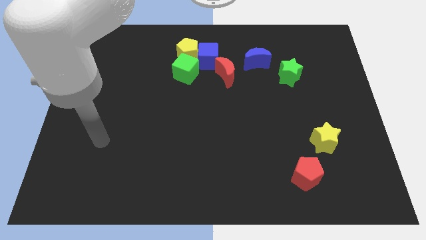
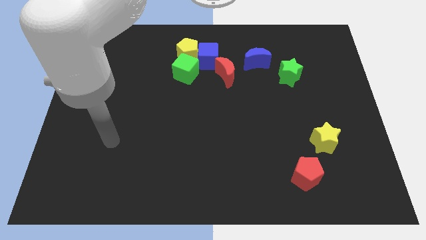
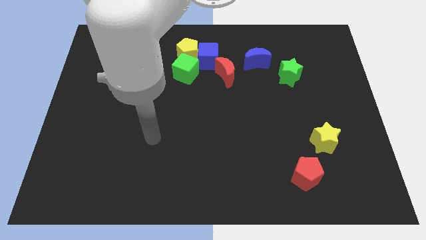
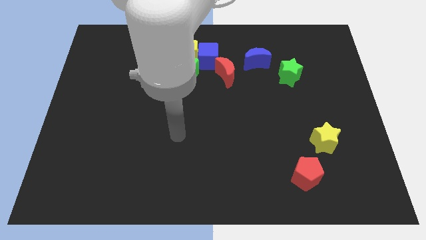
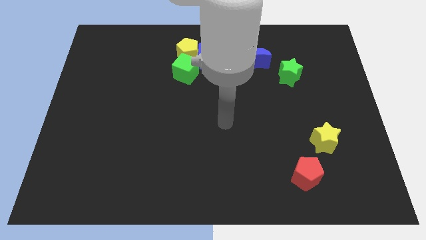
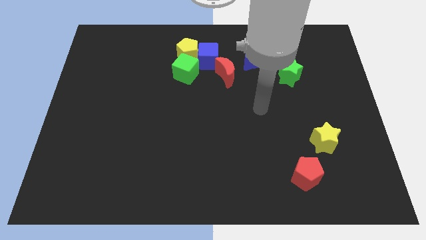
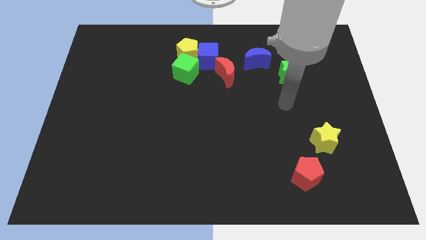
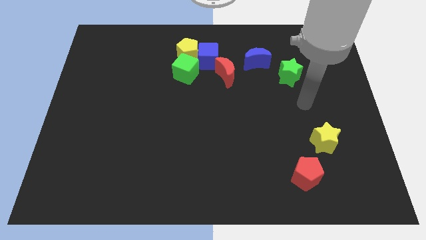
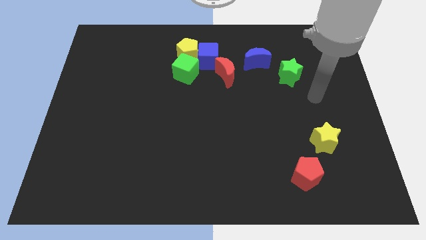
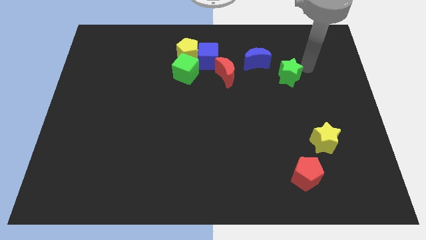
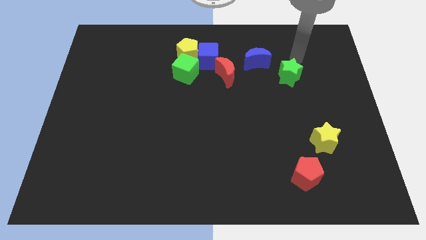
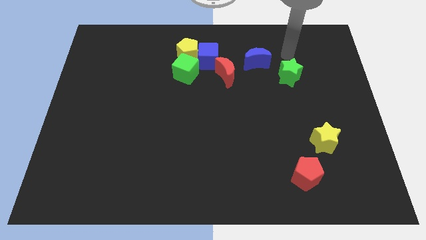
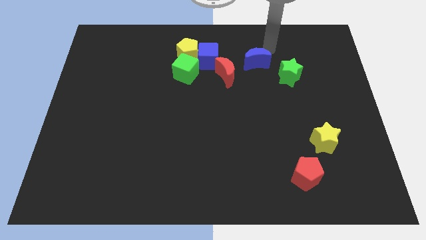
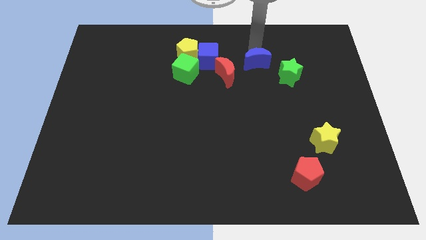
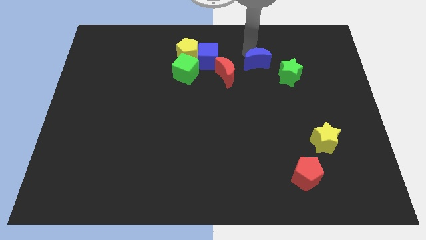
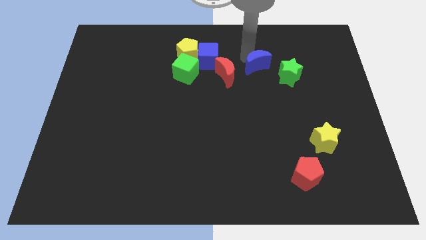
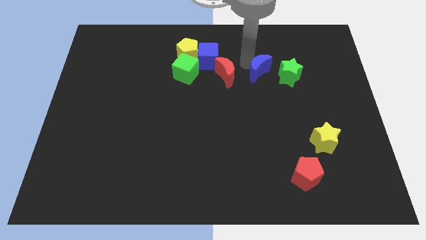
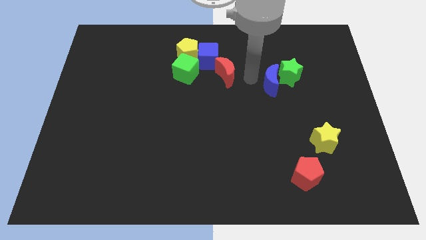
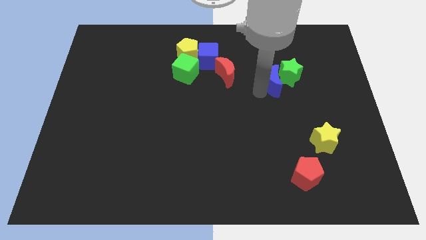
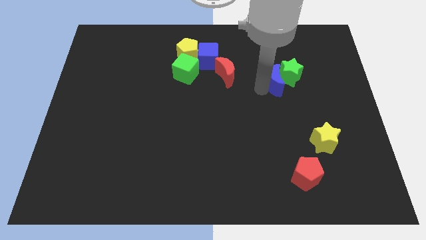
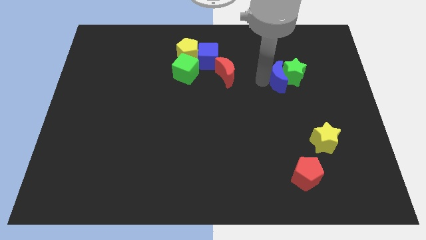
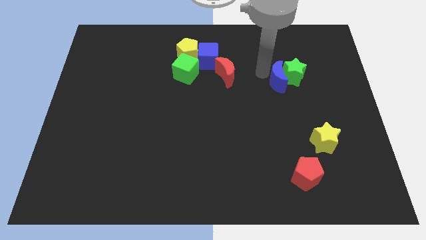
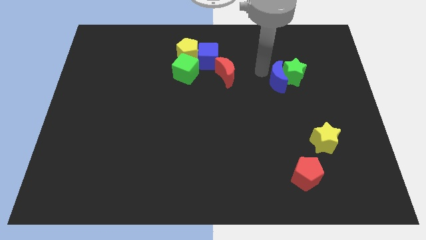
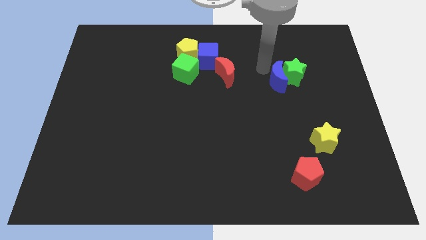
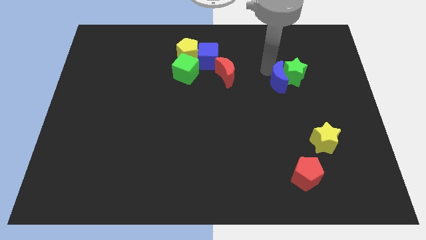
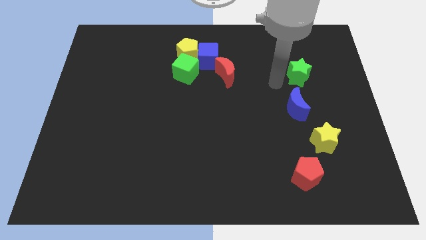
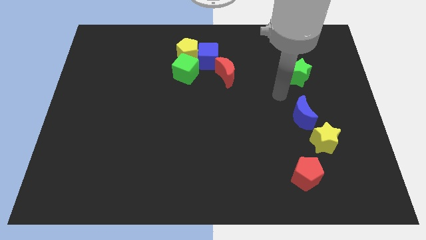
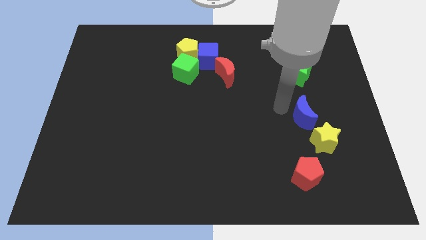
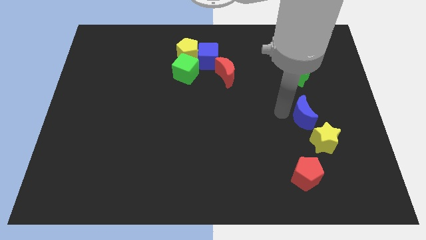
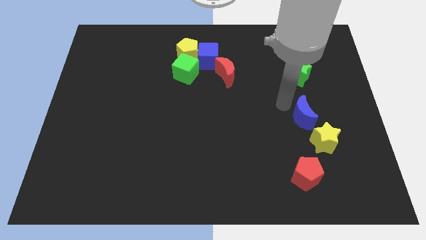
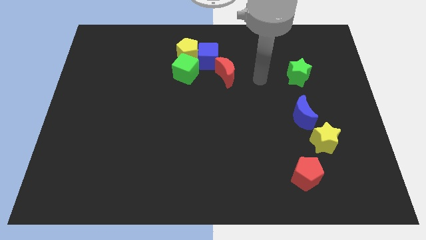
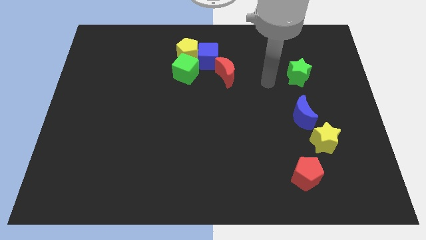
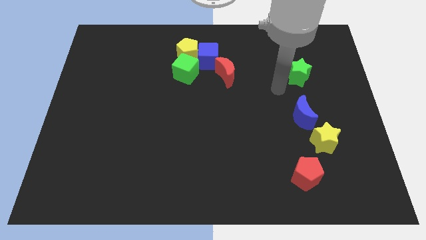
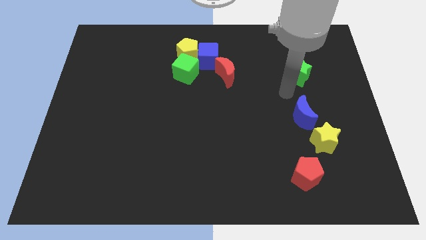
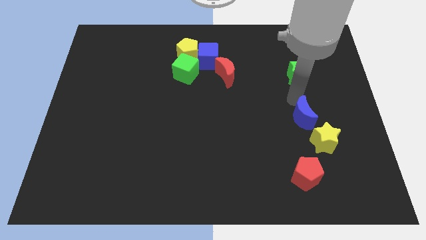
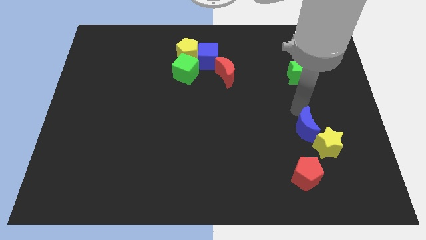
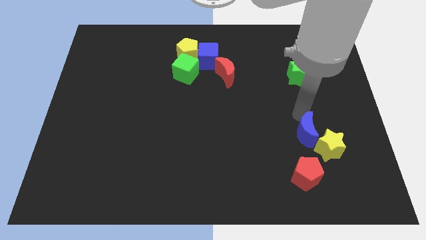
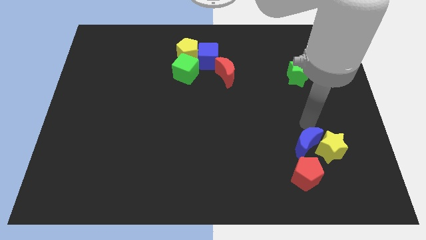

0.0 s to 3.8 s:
slide the blue moon next to the yellow star

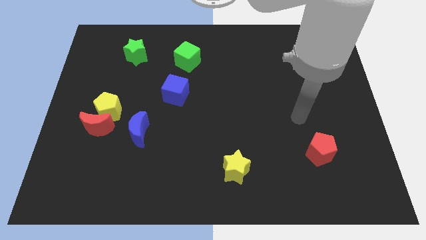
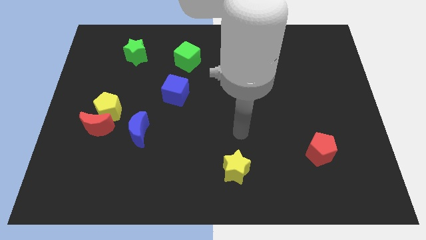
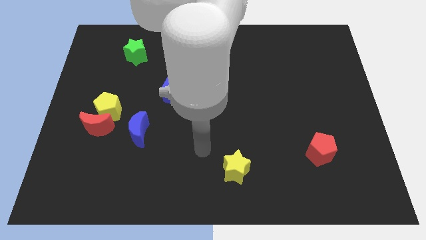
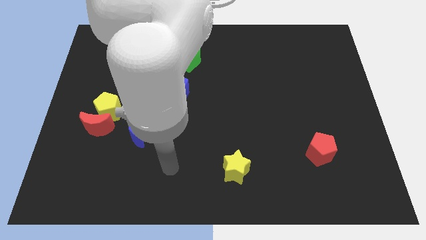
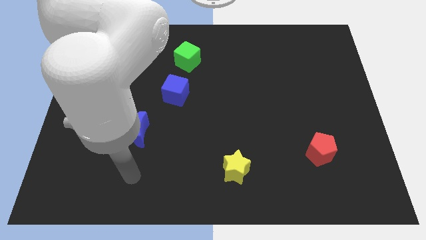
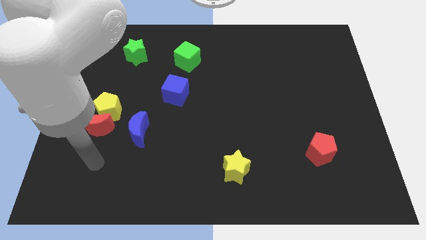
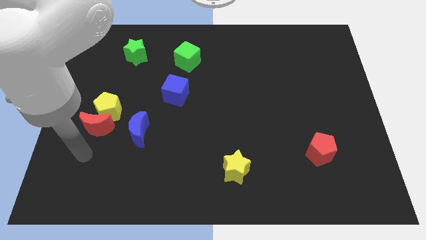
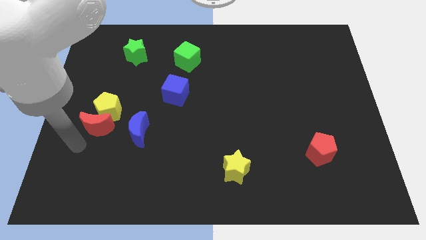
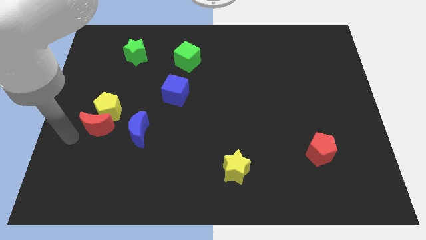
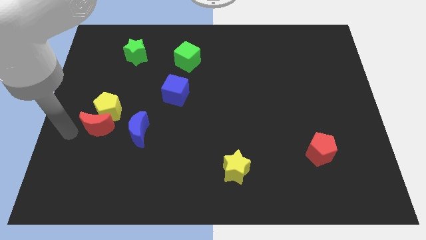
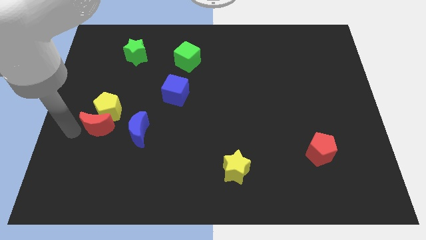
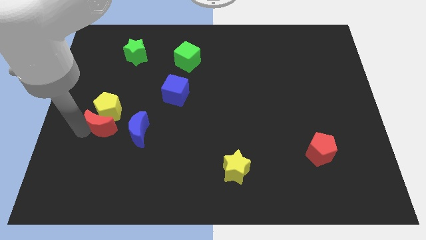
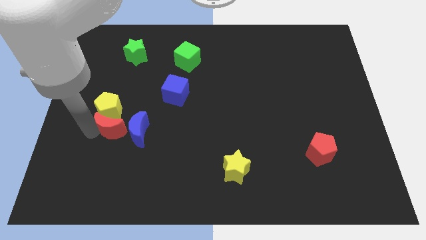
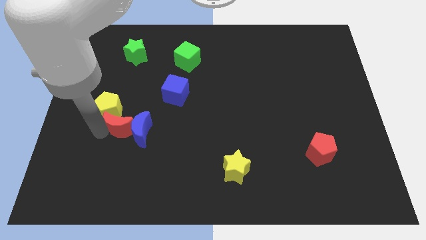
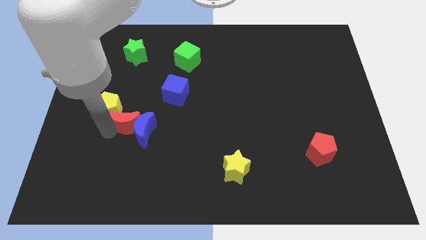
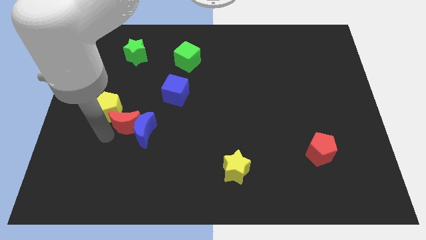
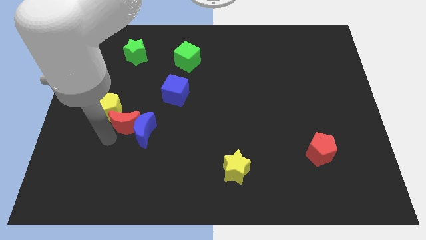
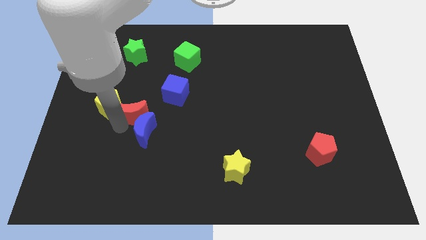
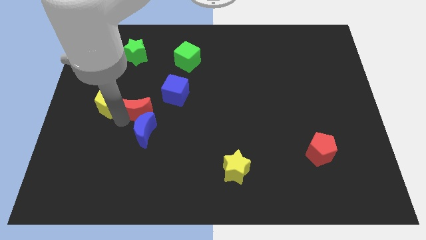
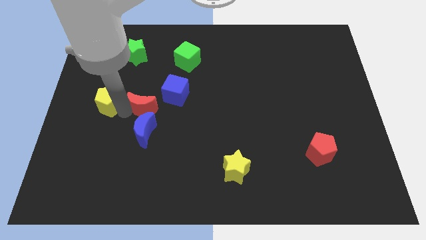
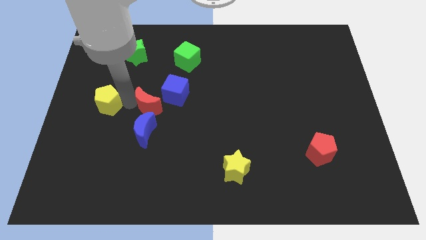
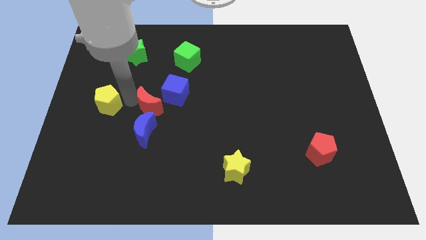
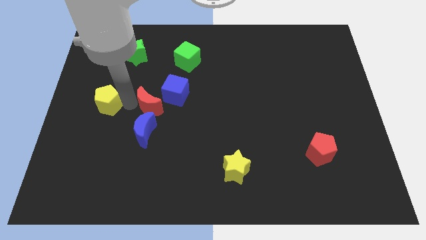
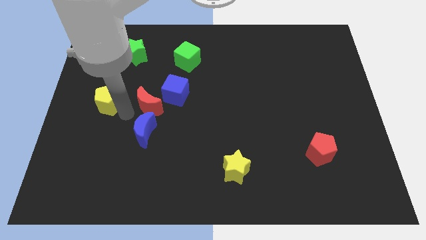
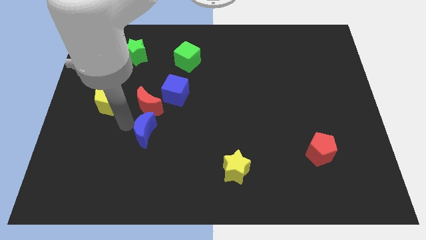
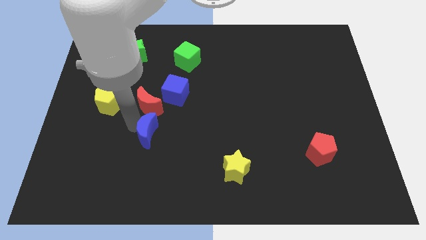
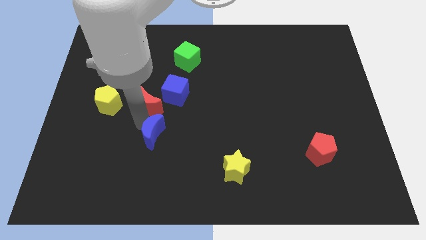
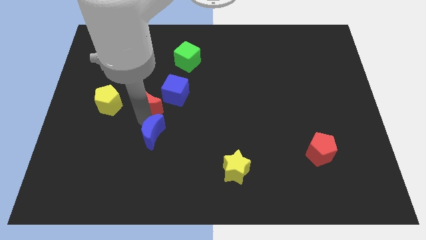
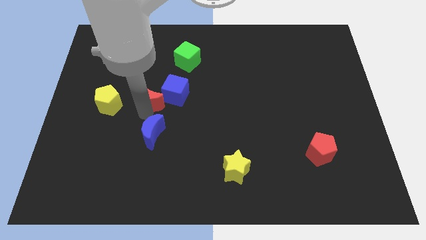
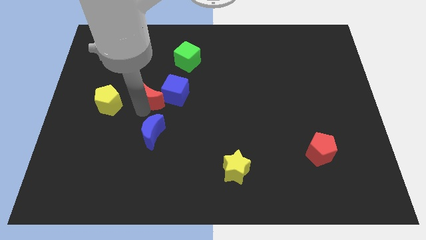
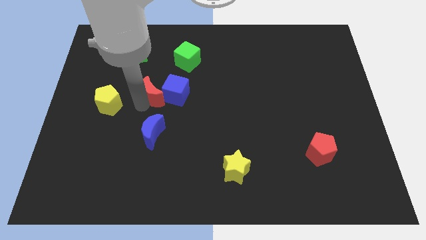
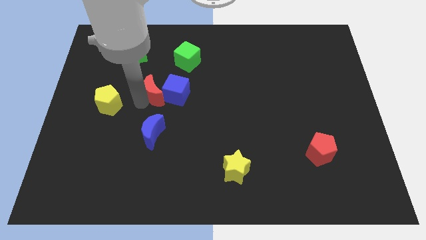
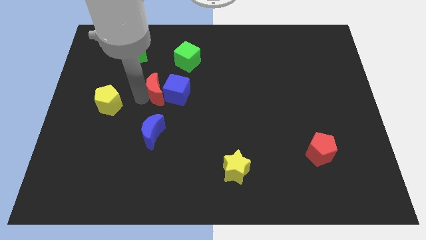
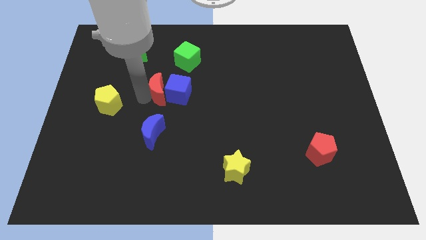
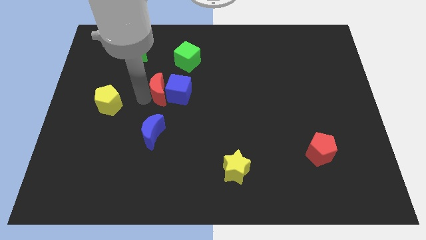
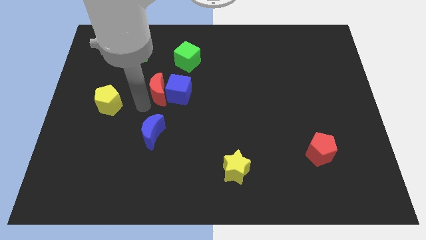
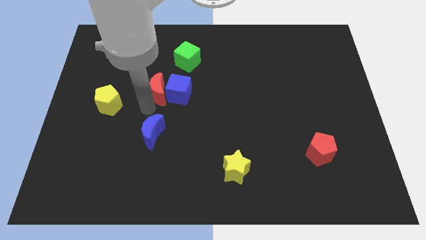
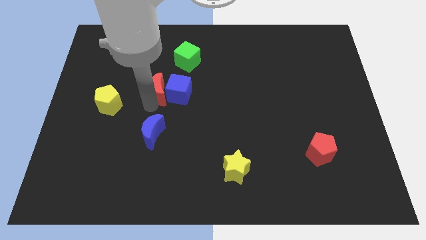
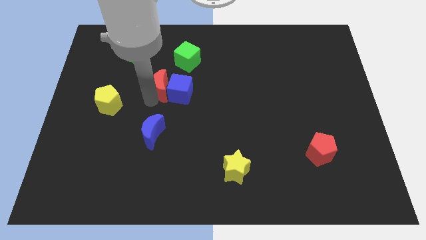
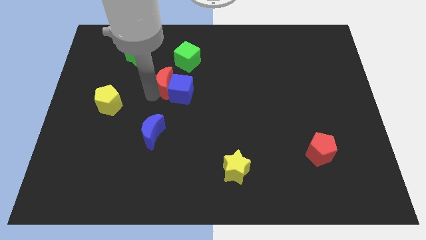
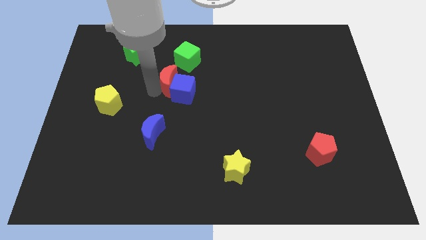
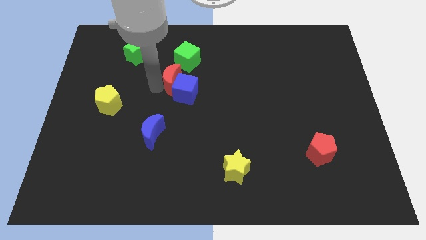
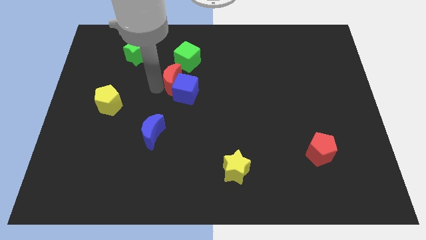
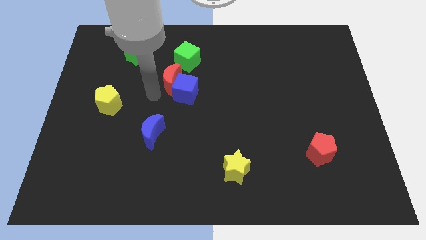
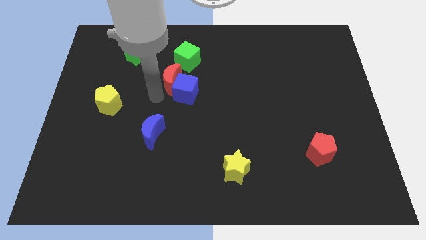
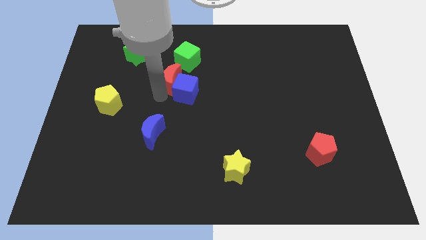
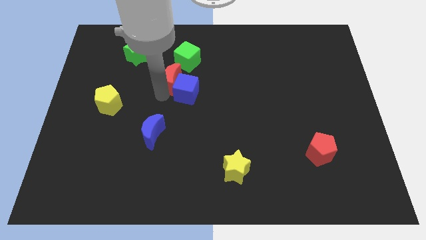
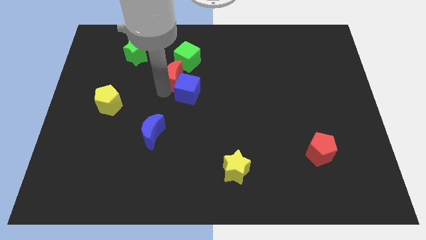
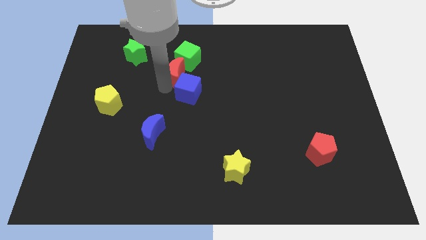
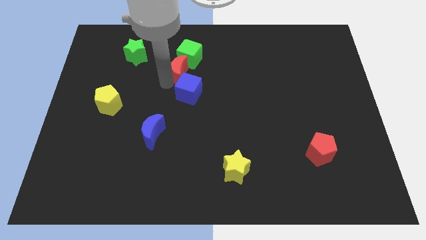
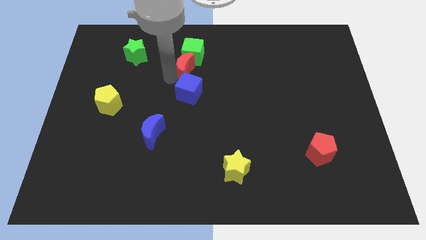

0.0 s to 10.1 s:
put the red moon towards the green cube
